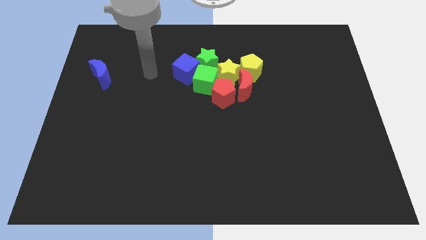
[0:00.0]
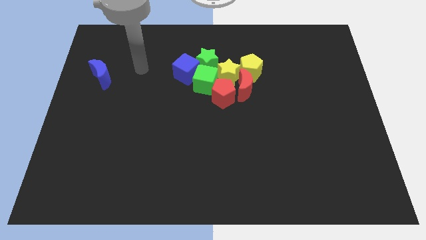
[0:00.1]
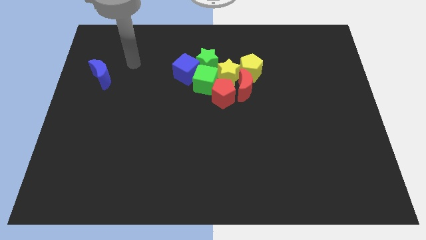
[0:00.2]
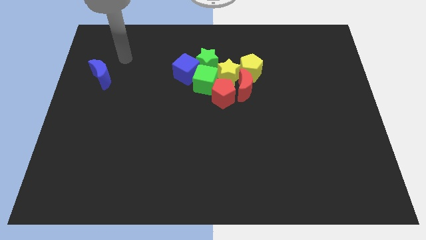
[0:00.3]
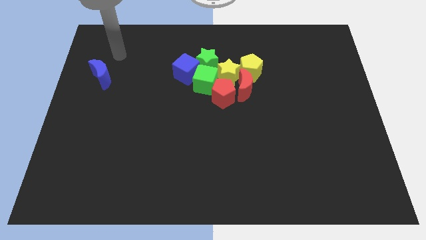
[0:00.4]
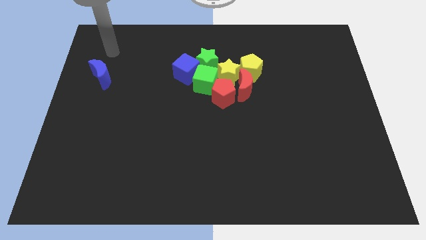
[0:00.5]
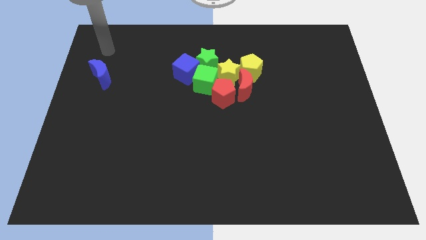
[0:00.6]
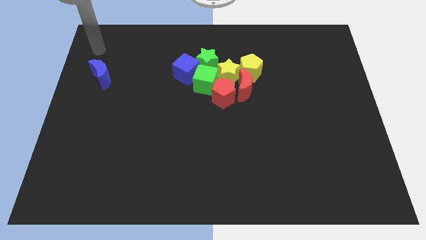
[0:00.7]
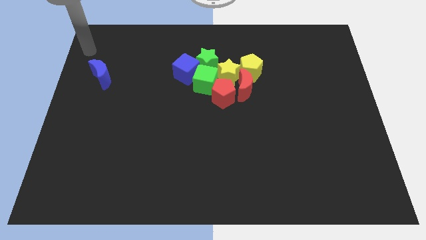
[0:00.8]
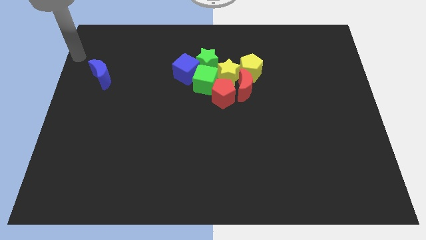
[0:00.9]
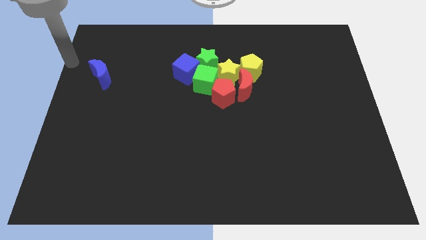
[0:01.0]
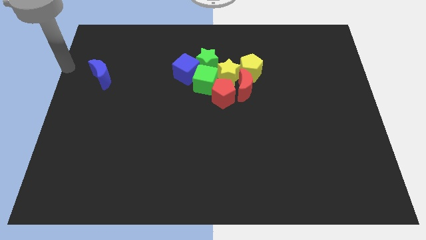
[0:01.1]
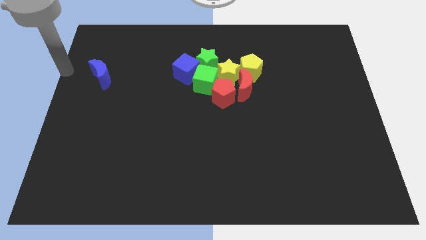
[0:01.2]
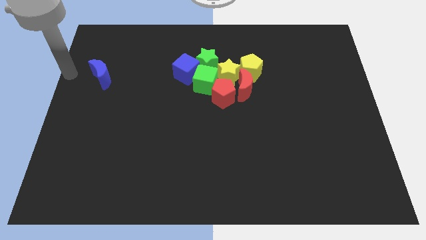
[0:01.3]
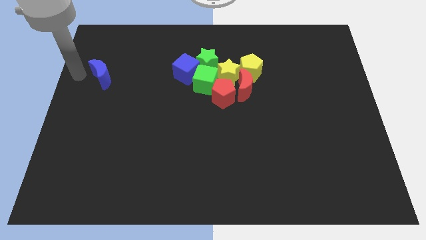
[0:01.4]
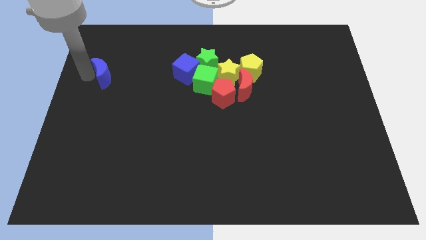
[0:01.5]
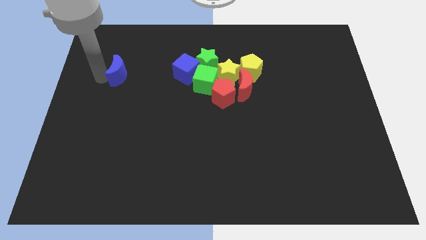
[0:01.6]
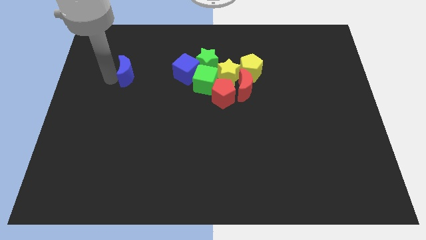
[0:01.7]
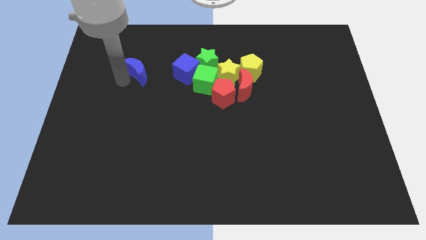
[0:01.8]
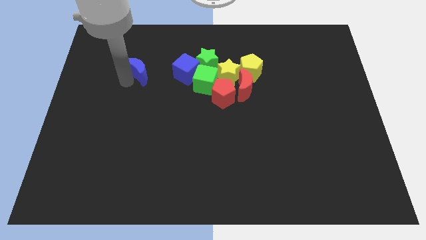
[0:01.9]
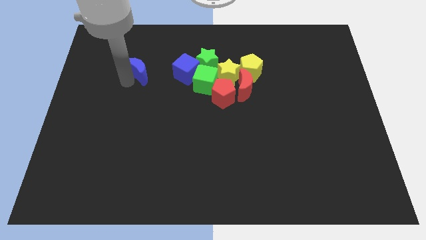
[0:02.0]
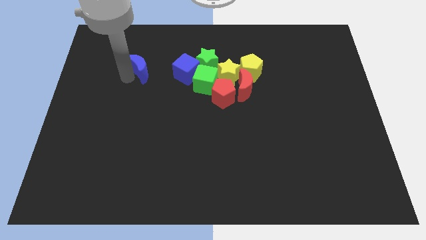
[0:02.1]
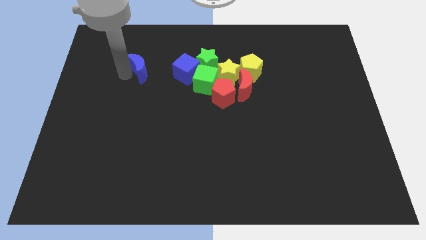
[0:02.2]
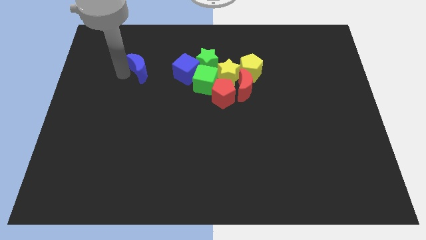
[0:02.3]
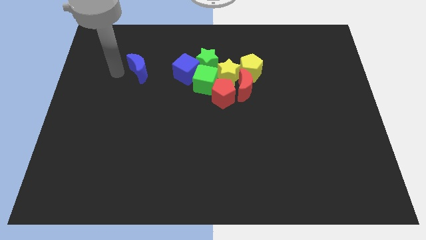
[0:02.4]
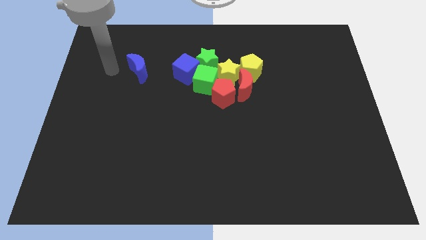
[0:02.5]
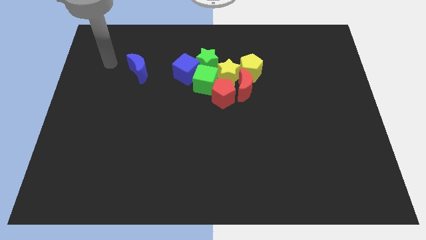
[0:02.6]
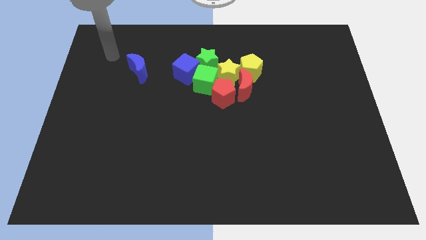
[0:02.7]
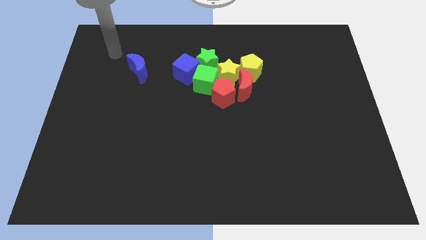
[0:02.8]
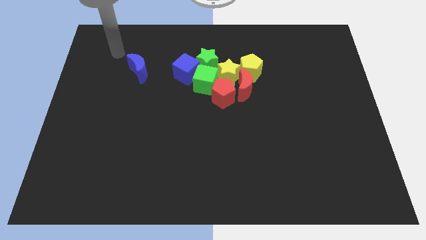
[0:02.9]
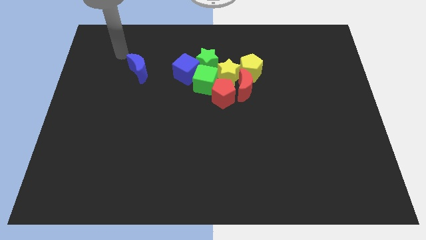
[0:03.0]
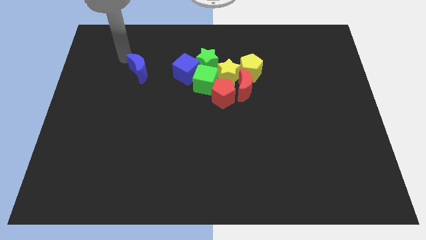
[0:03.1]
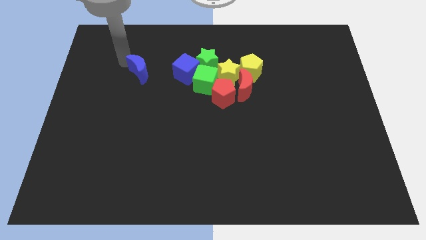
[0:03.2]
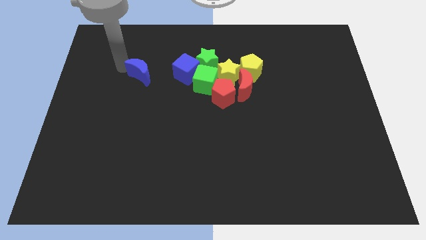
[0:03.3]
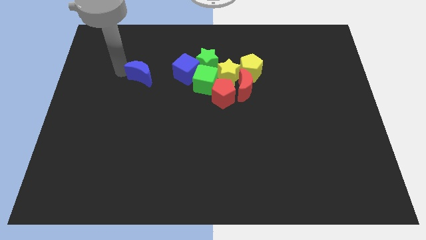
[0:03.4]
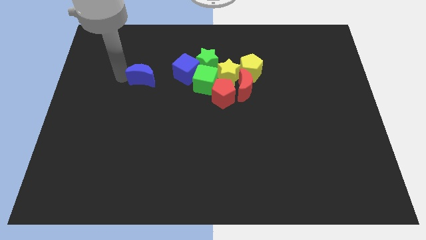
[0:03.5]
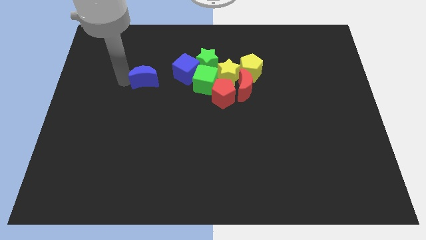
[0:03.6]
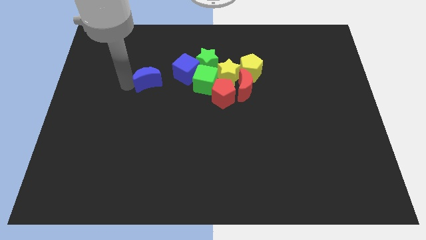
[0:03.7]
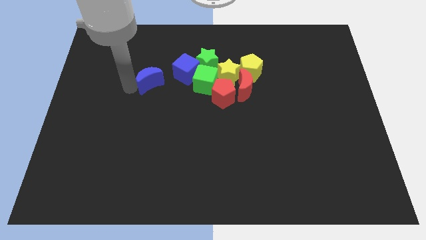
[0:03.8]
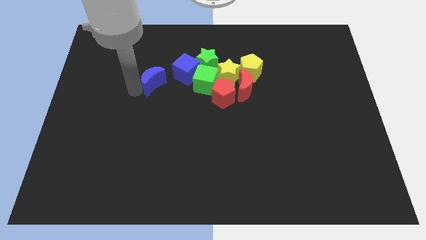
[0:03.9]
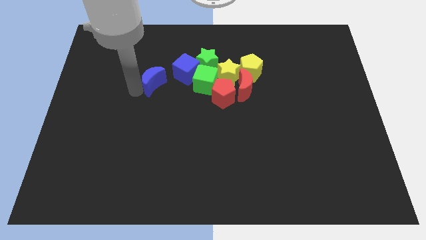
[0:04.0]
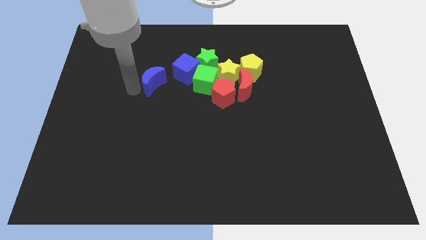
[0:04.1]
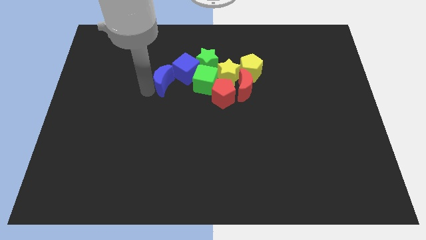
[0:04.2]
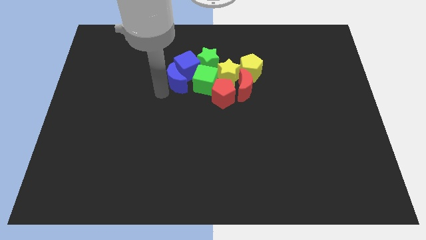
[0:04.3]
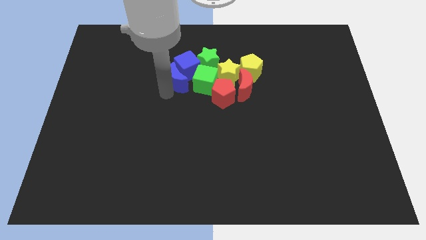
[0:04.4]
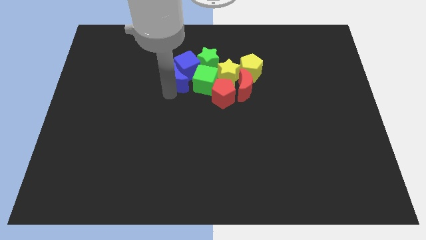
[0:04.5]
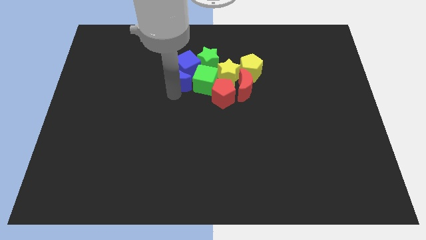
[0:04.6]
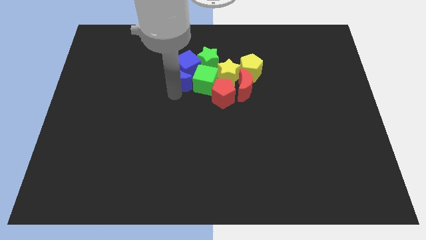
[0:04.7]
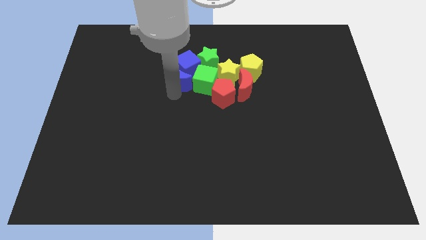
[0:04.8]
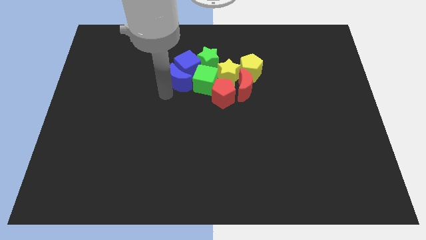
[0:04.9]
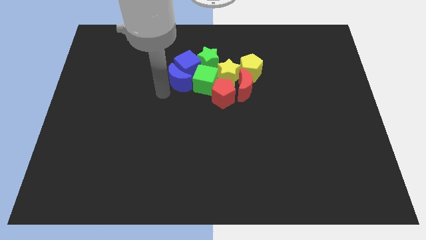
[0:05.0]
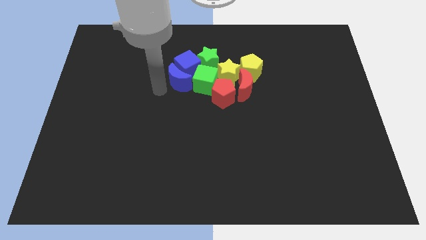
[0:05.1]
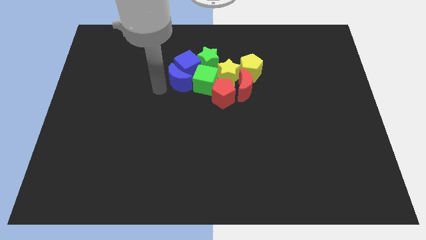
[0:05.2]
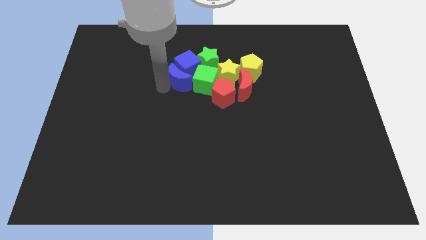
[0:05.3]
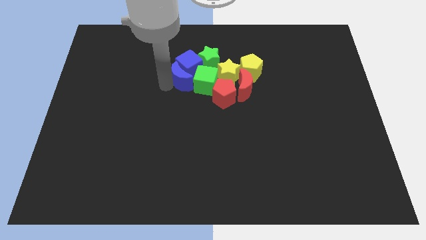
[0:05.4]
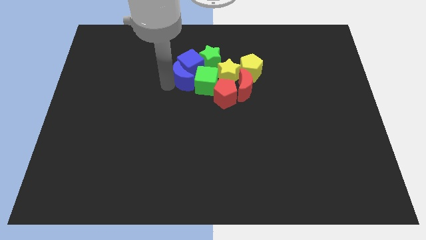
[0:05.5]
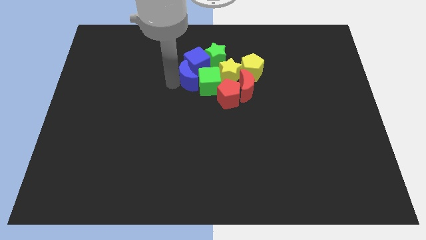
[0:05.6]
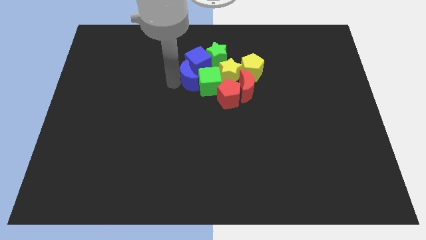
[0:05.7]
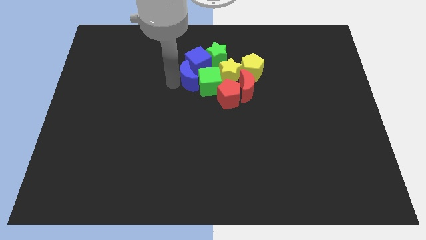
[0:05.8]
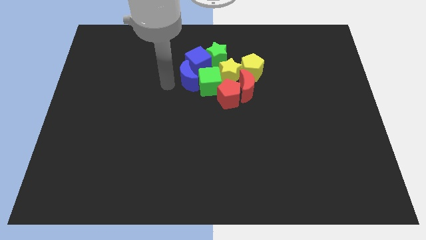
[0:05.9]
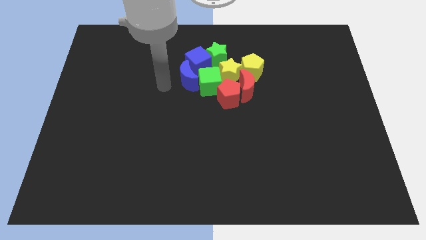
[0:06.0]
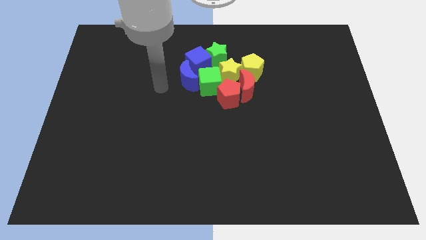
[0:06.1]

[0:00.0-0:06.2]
push the blue moon into the group of blocks

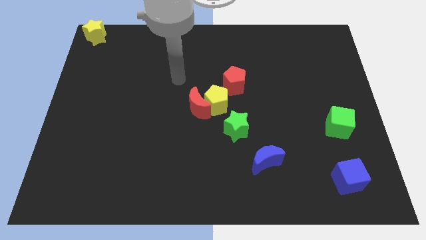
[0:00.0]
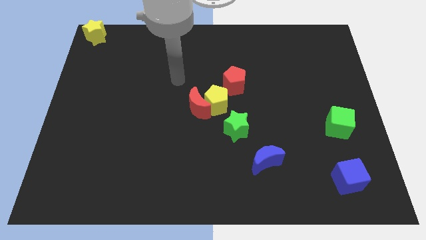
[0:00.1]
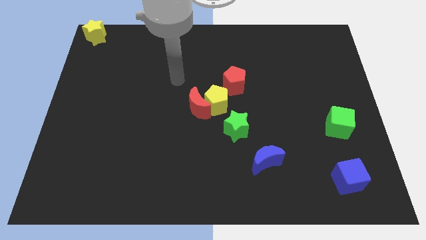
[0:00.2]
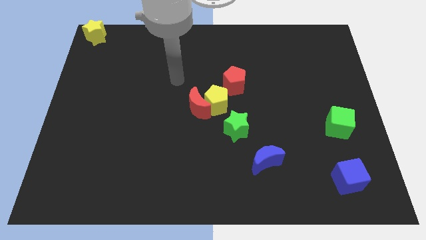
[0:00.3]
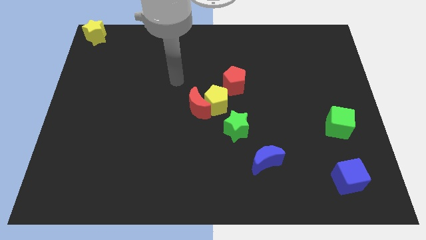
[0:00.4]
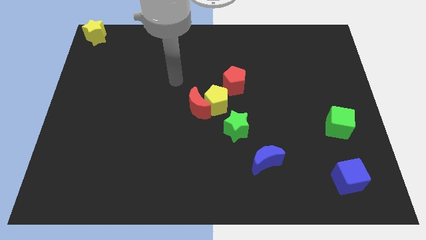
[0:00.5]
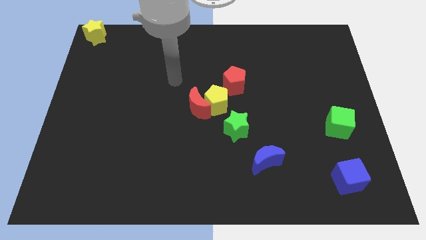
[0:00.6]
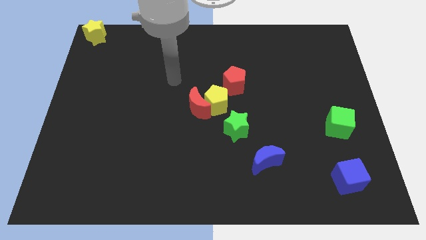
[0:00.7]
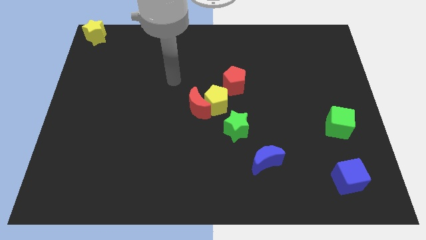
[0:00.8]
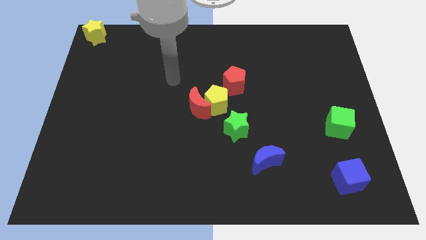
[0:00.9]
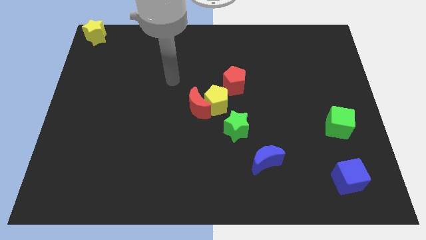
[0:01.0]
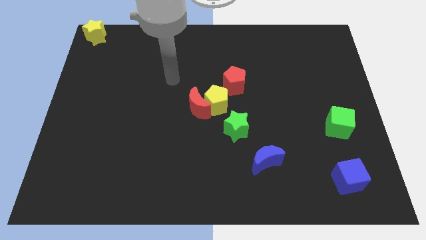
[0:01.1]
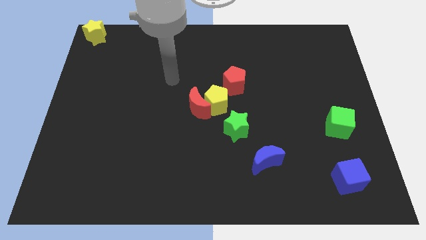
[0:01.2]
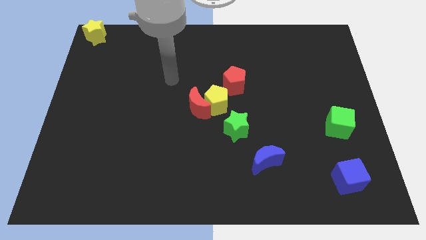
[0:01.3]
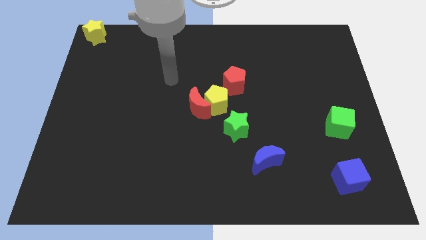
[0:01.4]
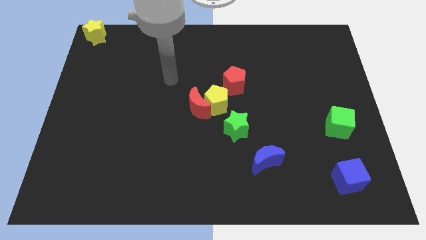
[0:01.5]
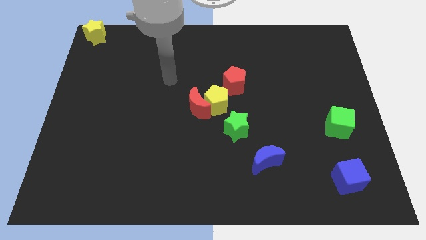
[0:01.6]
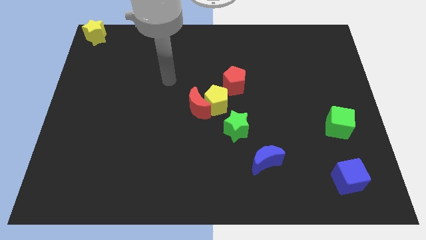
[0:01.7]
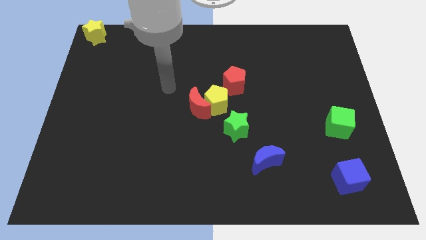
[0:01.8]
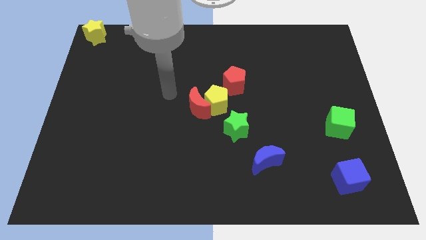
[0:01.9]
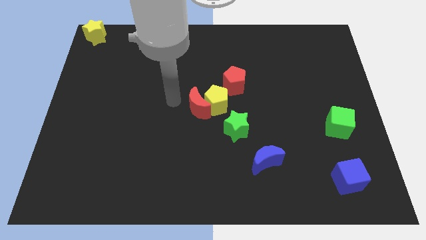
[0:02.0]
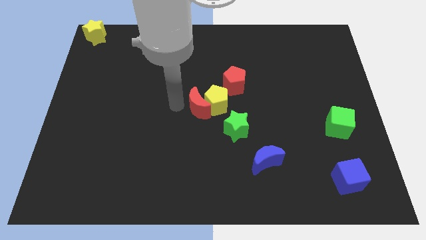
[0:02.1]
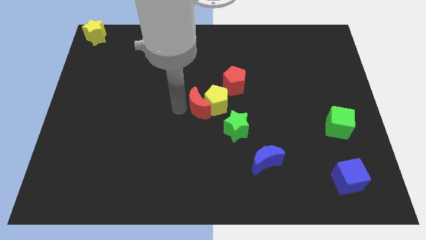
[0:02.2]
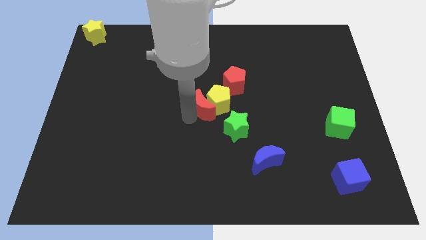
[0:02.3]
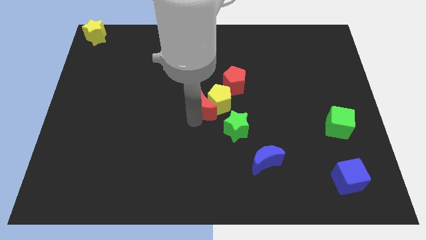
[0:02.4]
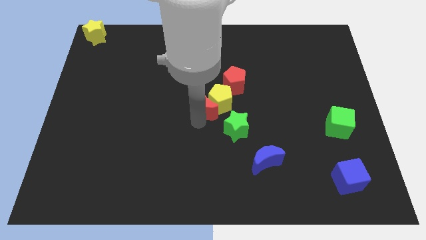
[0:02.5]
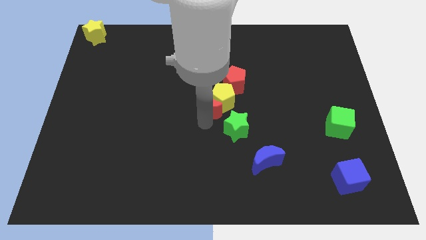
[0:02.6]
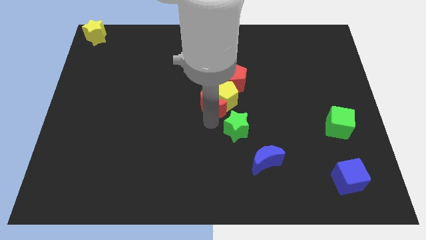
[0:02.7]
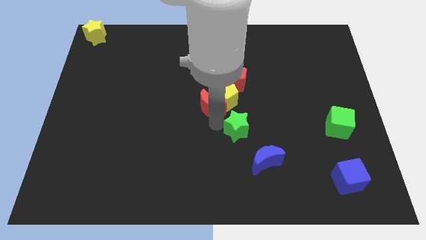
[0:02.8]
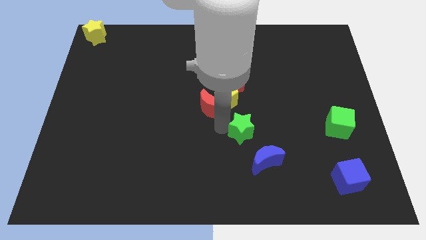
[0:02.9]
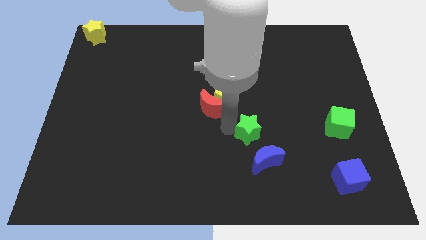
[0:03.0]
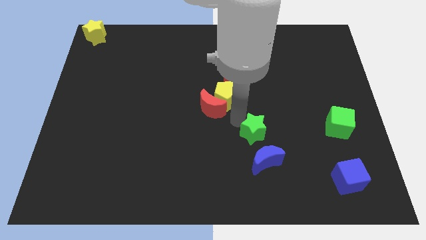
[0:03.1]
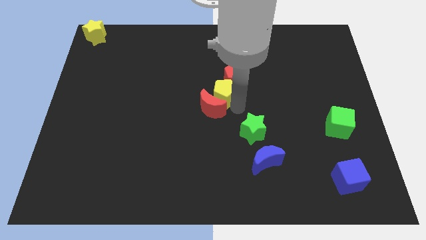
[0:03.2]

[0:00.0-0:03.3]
adjust the green star between the yellow pentagon and blue moon
